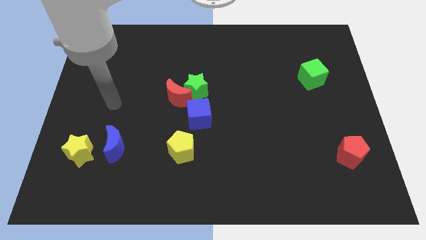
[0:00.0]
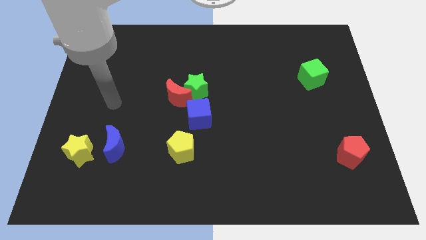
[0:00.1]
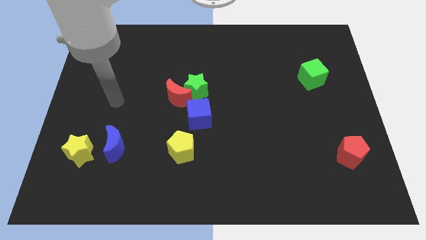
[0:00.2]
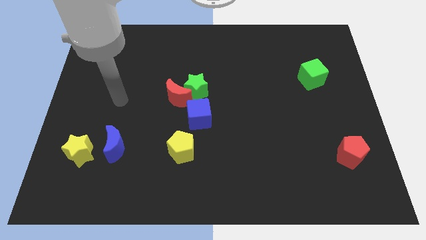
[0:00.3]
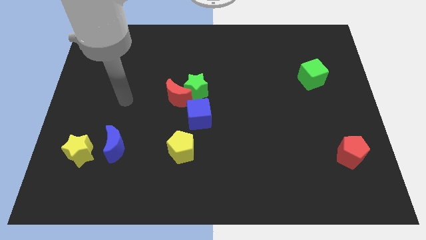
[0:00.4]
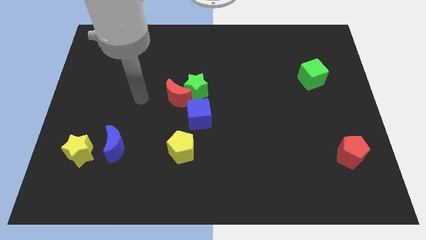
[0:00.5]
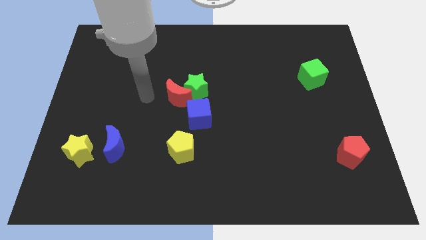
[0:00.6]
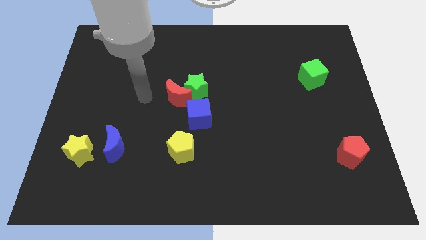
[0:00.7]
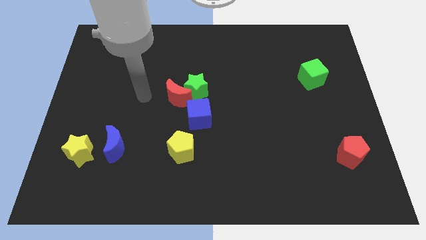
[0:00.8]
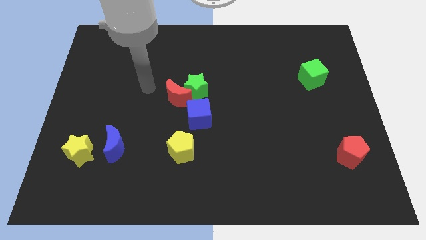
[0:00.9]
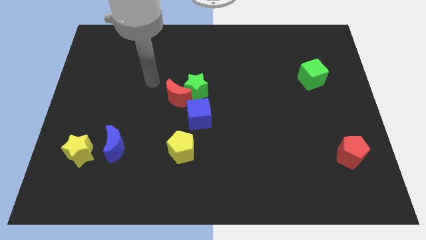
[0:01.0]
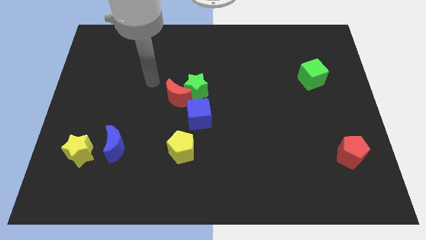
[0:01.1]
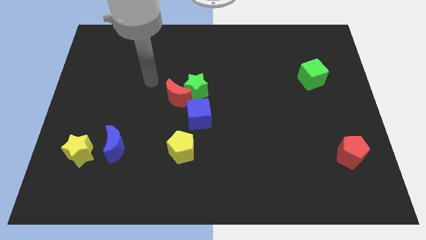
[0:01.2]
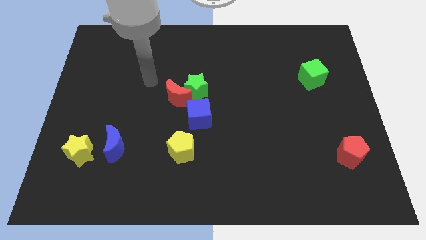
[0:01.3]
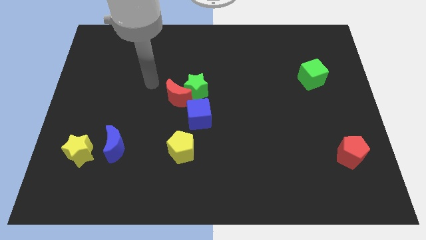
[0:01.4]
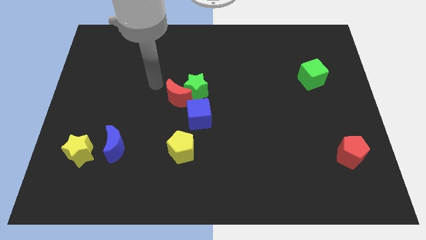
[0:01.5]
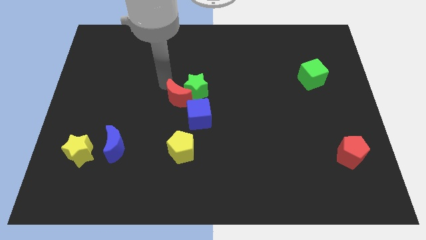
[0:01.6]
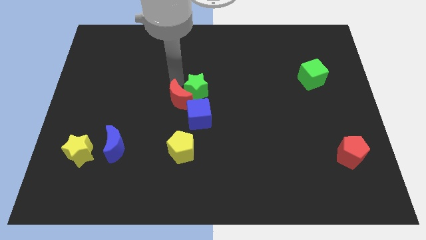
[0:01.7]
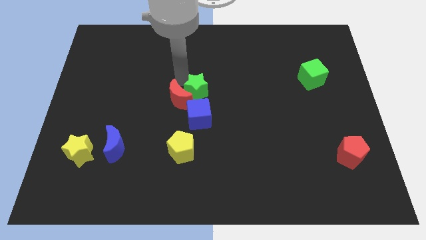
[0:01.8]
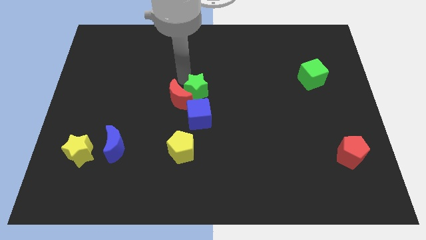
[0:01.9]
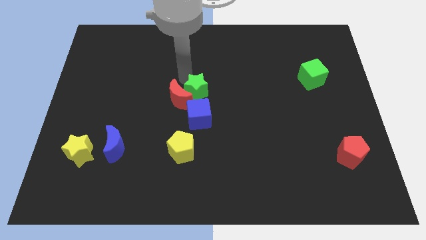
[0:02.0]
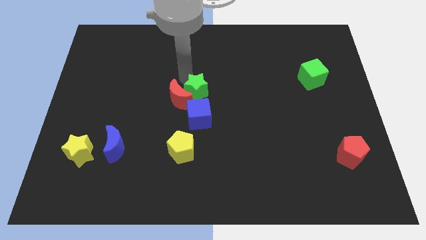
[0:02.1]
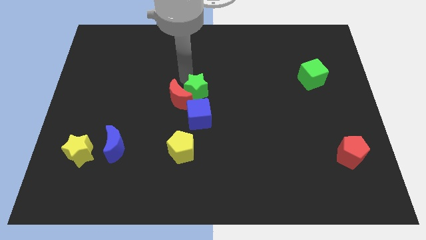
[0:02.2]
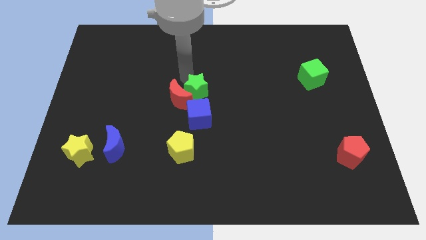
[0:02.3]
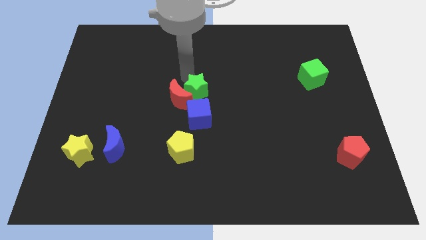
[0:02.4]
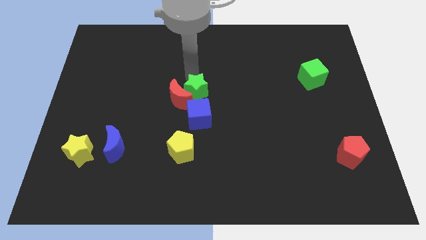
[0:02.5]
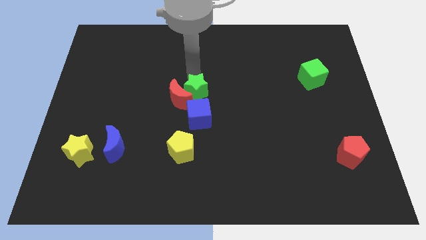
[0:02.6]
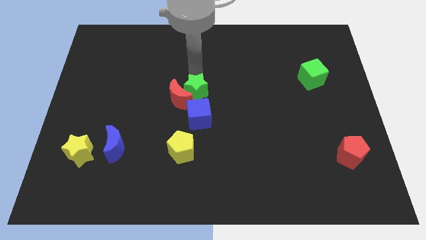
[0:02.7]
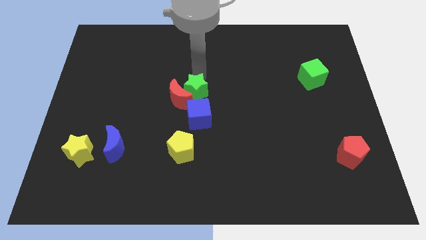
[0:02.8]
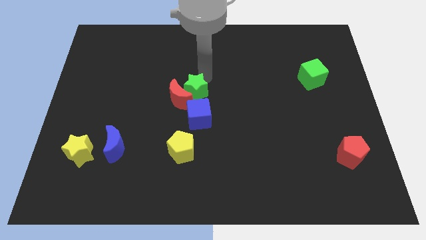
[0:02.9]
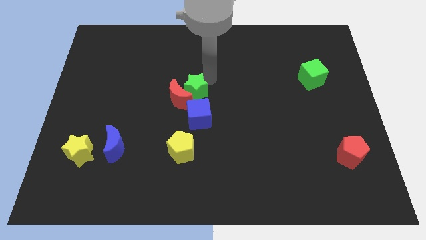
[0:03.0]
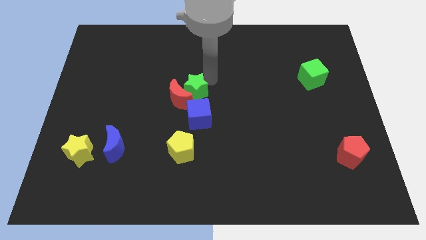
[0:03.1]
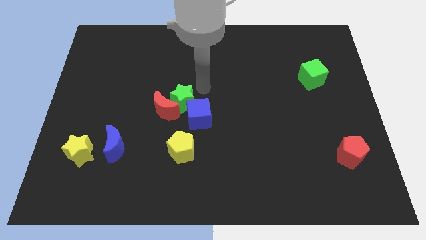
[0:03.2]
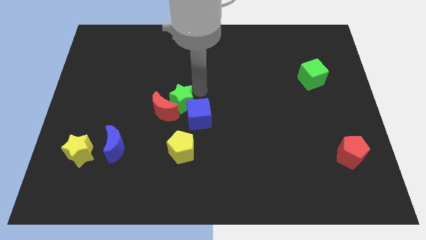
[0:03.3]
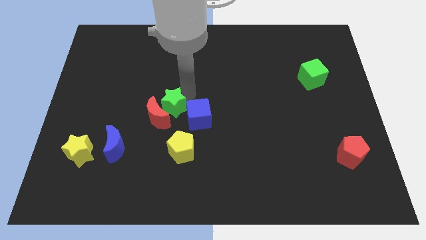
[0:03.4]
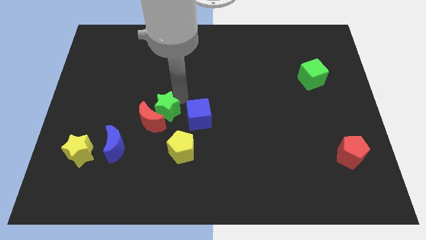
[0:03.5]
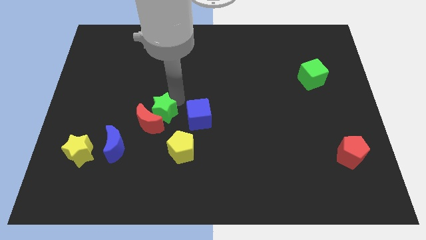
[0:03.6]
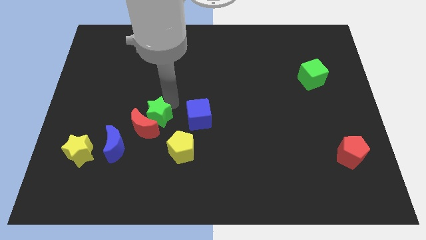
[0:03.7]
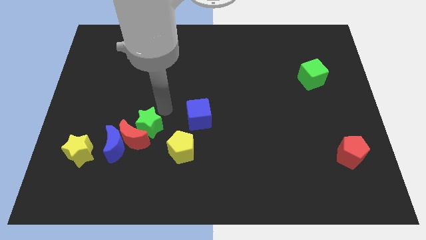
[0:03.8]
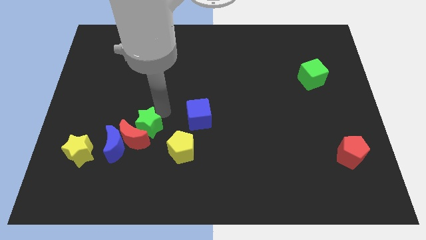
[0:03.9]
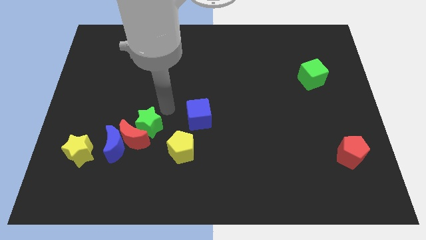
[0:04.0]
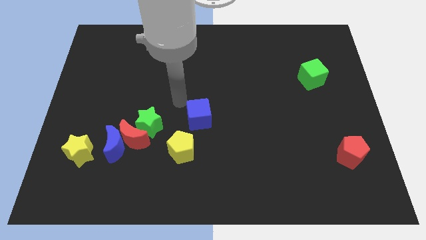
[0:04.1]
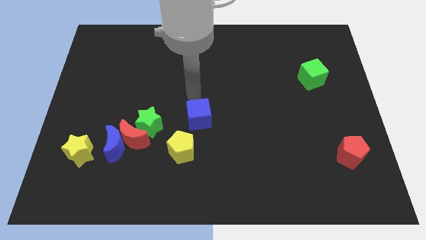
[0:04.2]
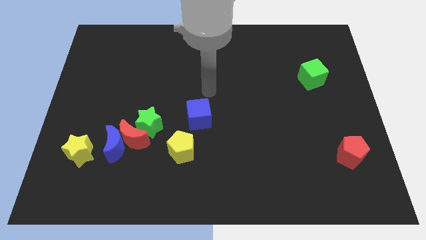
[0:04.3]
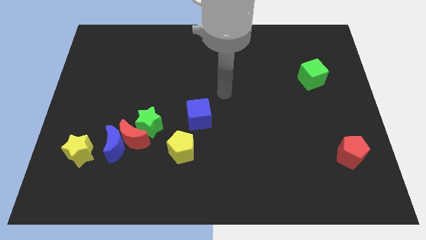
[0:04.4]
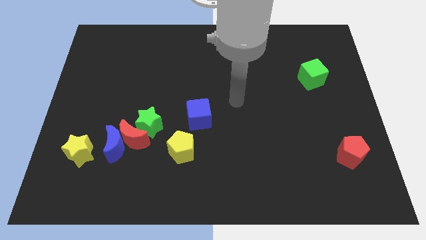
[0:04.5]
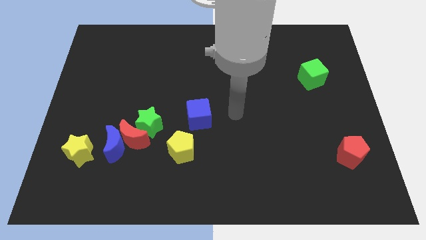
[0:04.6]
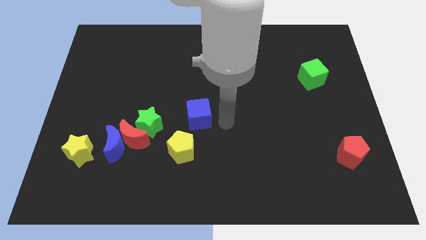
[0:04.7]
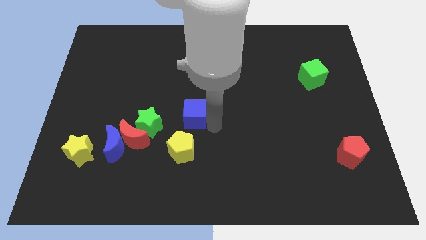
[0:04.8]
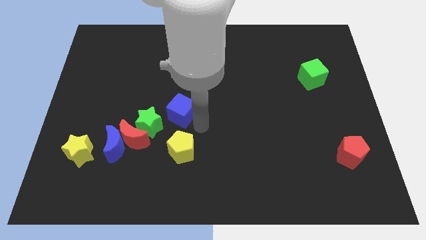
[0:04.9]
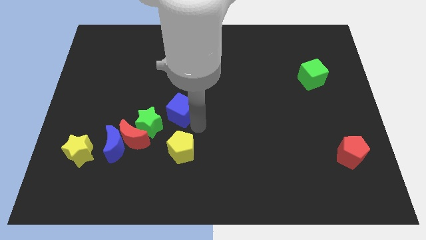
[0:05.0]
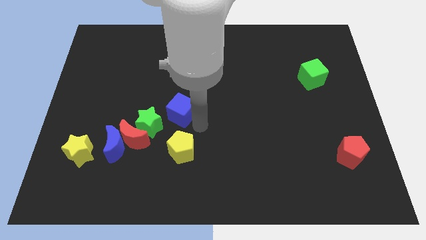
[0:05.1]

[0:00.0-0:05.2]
move the red crescent green star to the blue crescent

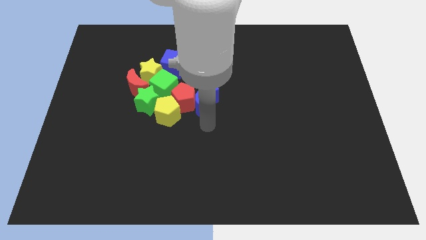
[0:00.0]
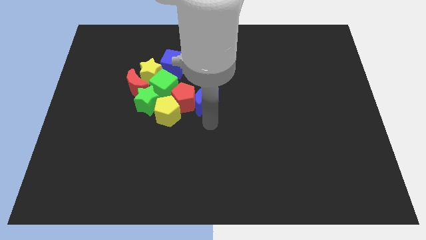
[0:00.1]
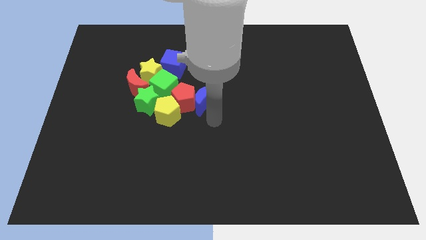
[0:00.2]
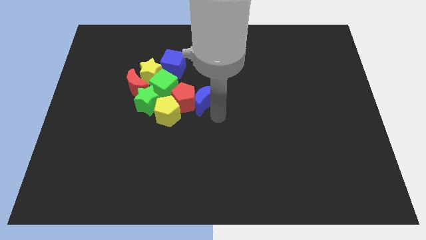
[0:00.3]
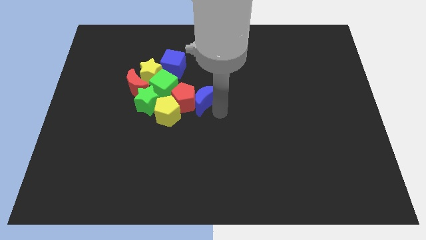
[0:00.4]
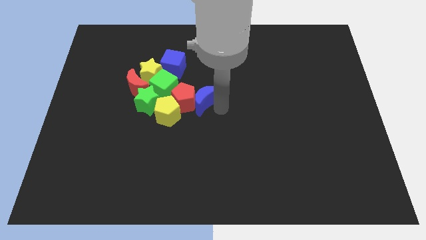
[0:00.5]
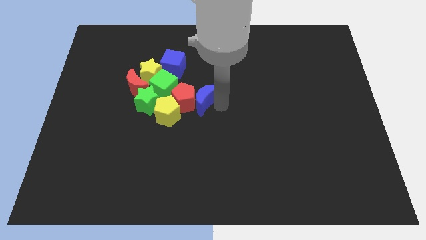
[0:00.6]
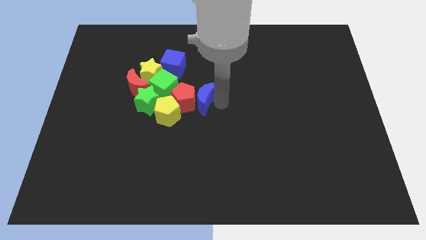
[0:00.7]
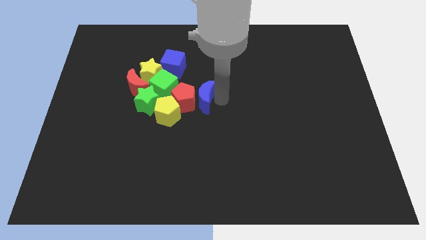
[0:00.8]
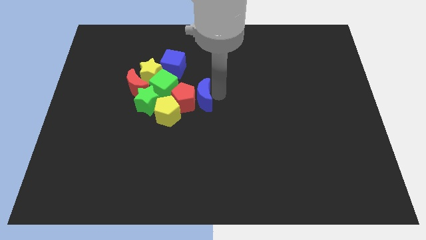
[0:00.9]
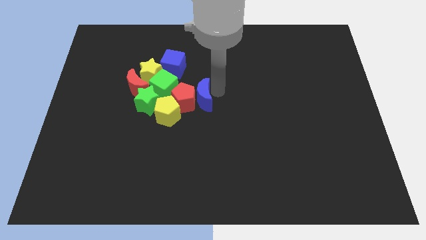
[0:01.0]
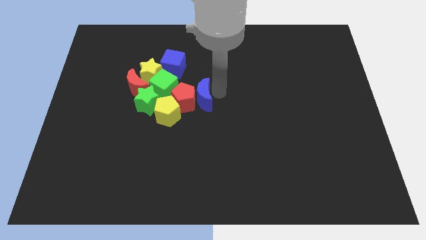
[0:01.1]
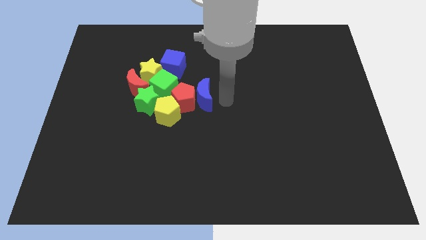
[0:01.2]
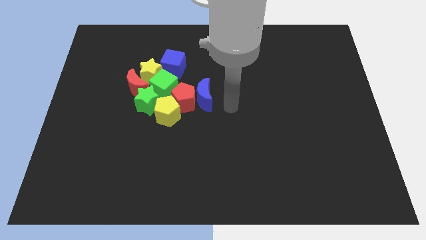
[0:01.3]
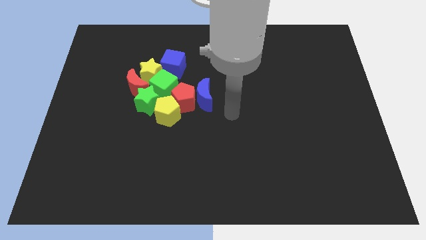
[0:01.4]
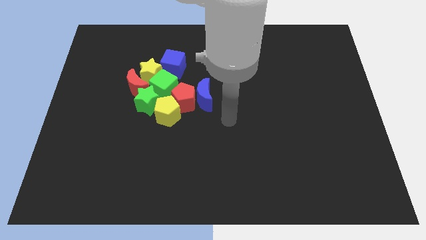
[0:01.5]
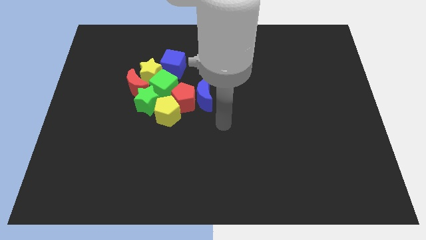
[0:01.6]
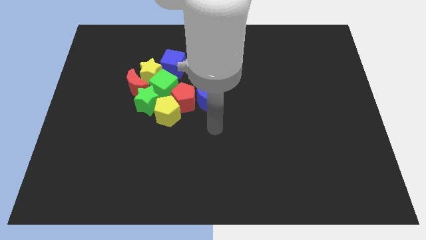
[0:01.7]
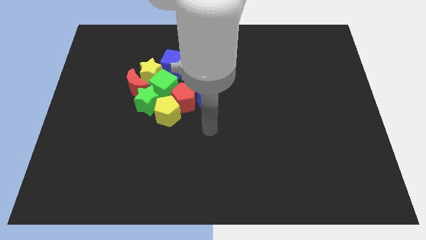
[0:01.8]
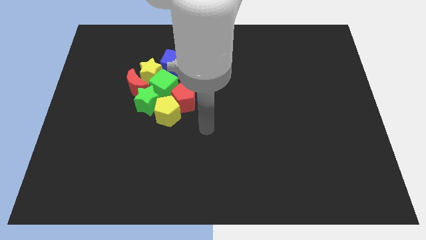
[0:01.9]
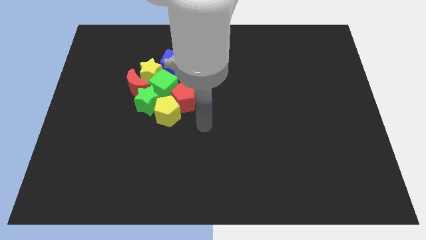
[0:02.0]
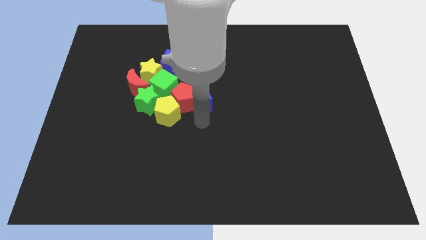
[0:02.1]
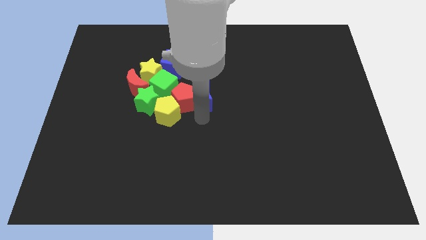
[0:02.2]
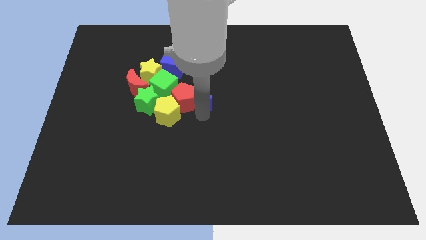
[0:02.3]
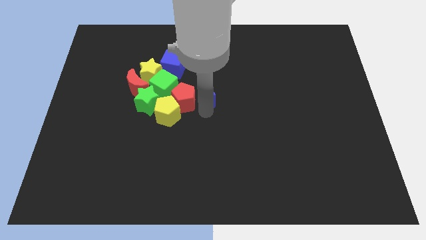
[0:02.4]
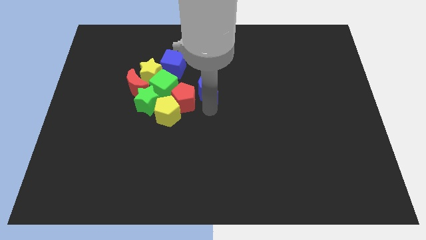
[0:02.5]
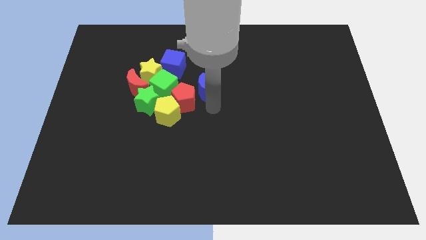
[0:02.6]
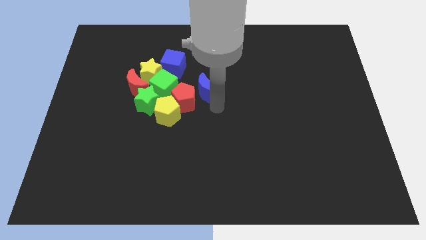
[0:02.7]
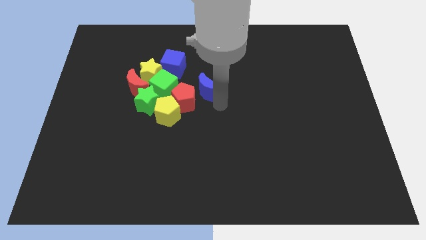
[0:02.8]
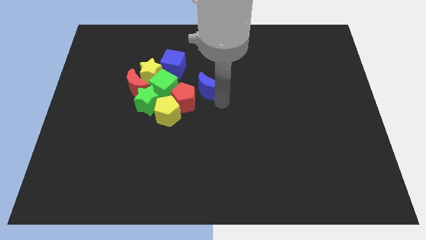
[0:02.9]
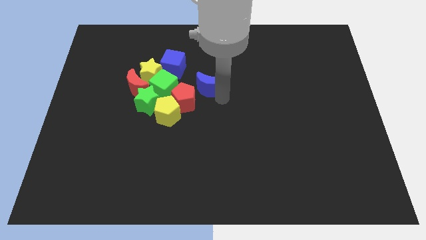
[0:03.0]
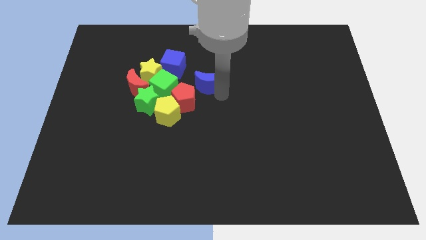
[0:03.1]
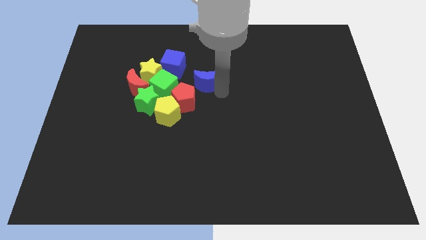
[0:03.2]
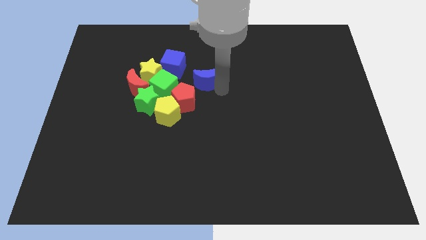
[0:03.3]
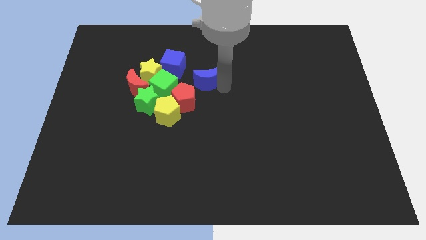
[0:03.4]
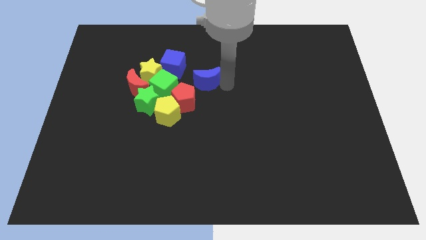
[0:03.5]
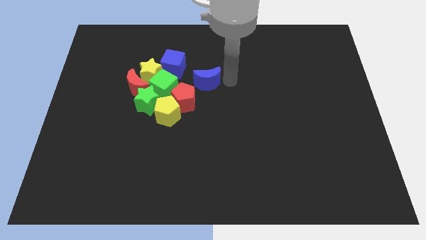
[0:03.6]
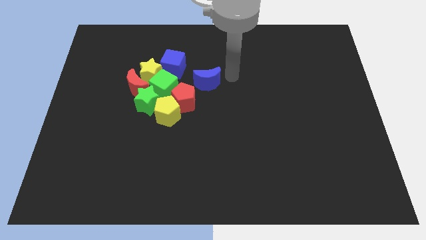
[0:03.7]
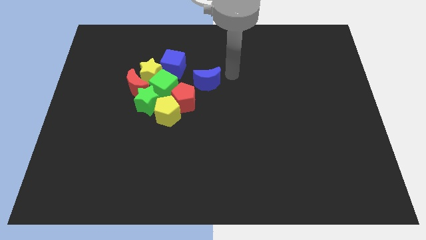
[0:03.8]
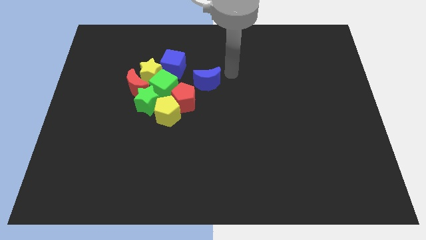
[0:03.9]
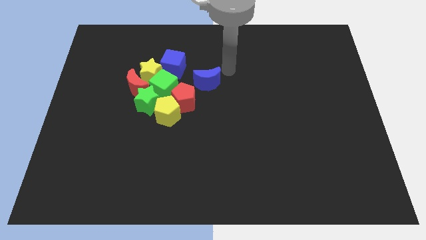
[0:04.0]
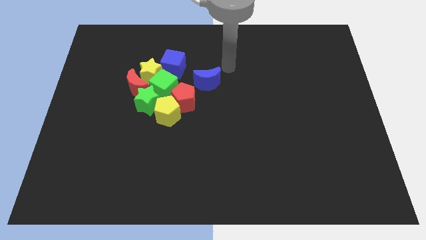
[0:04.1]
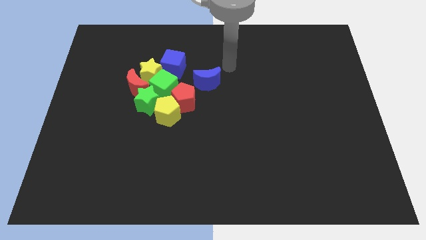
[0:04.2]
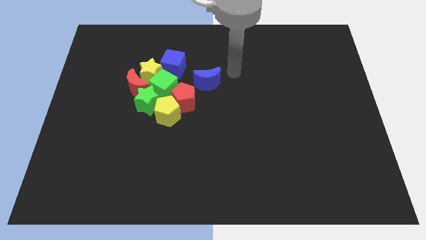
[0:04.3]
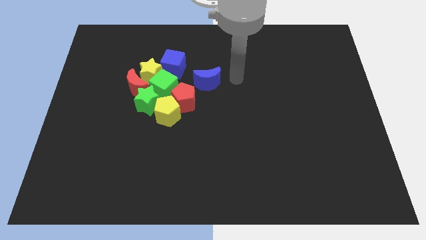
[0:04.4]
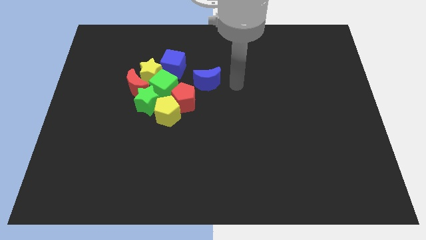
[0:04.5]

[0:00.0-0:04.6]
place blue crescent right to green cube
